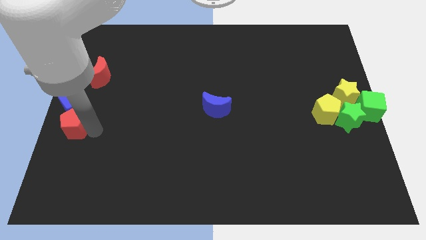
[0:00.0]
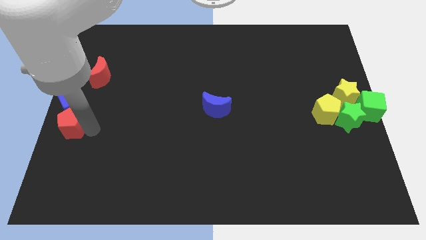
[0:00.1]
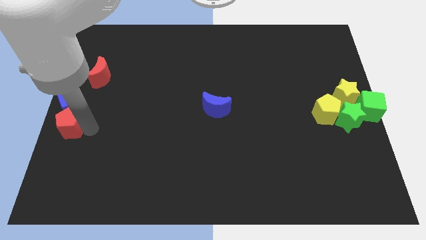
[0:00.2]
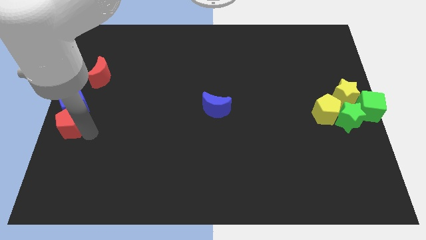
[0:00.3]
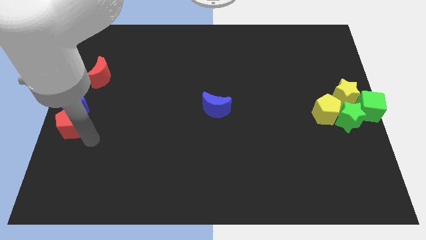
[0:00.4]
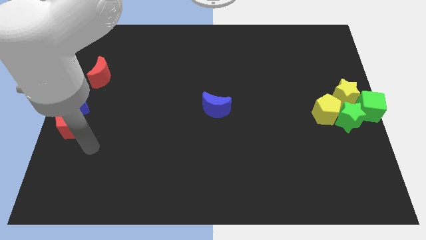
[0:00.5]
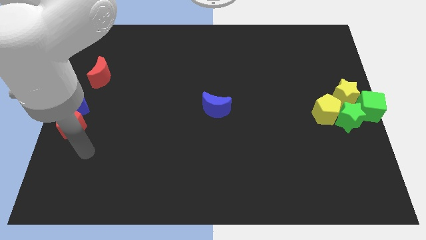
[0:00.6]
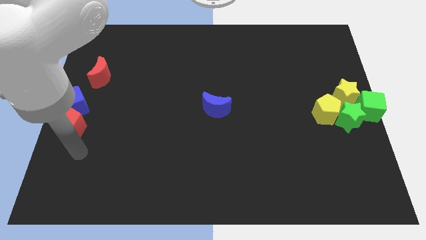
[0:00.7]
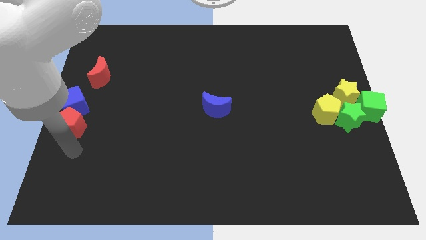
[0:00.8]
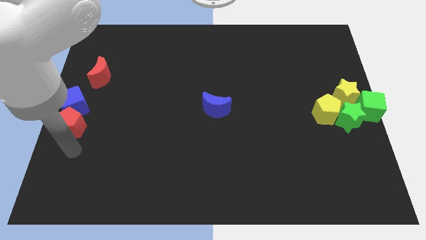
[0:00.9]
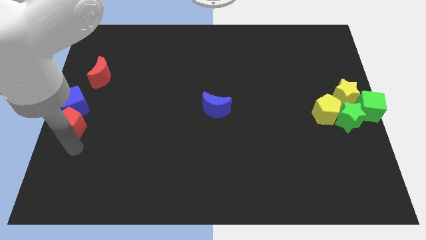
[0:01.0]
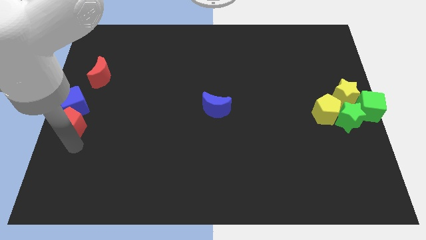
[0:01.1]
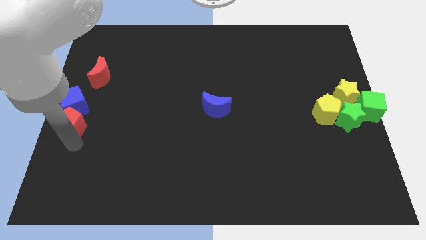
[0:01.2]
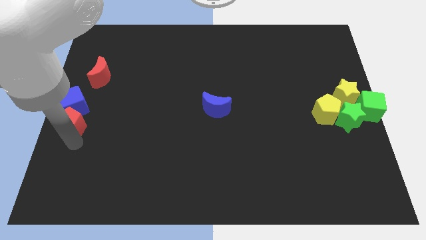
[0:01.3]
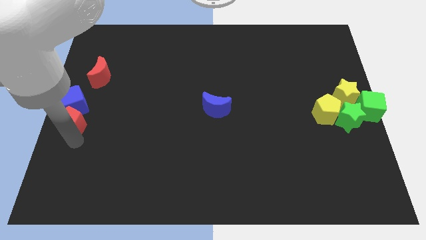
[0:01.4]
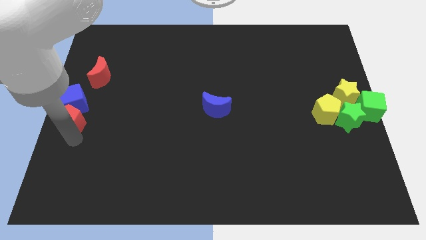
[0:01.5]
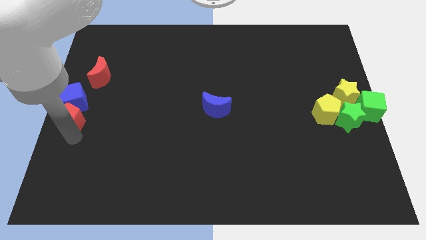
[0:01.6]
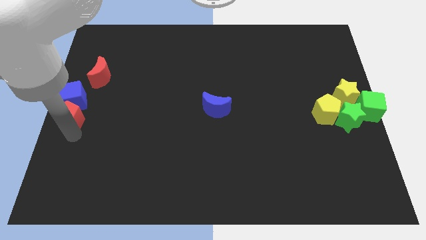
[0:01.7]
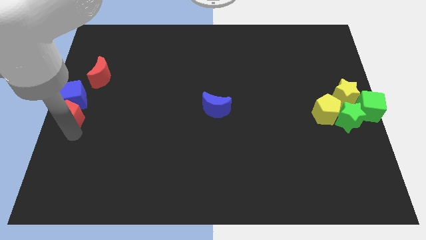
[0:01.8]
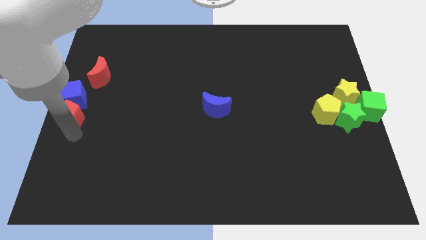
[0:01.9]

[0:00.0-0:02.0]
move the red pentagon to the bottom side of the blue cube

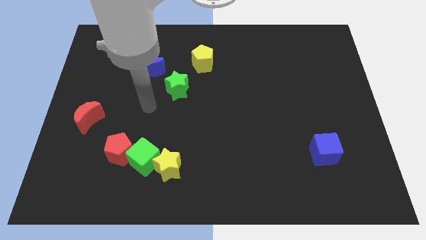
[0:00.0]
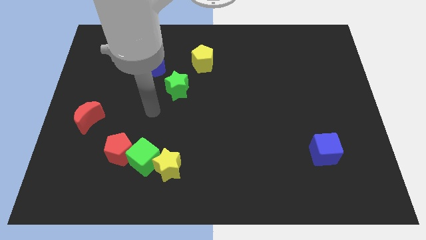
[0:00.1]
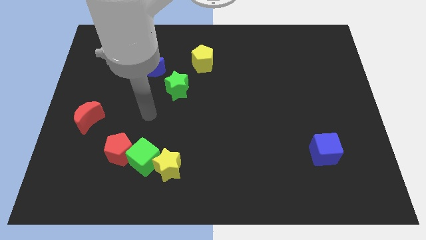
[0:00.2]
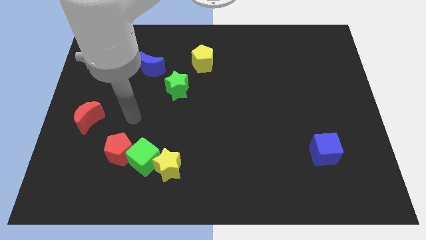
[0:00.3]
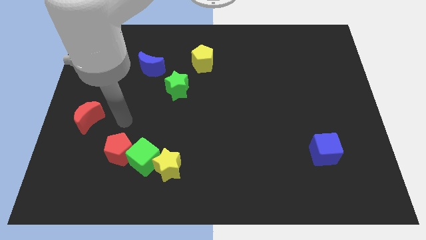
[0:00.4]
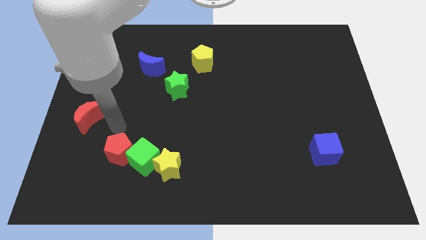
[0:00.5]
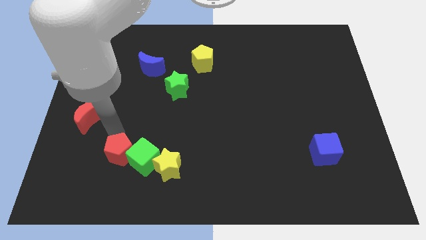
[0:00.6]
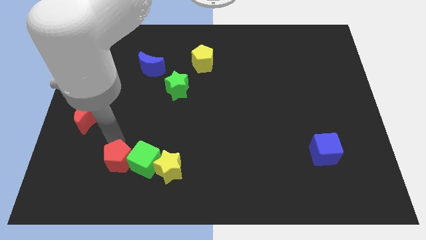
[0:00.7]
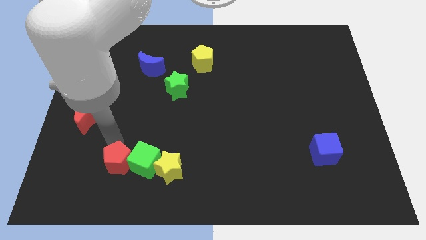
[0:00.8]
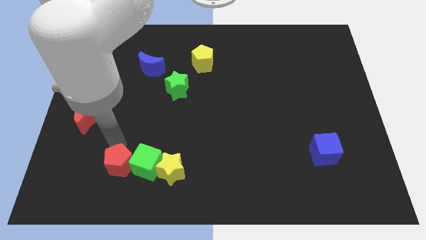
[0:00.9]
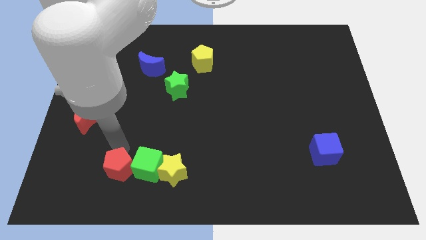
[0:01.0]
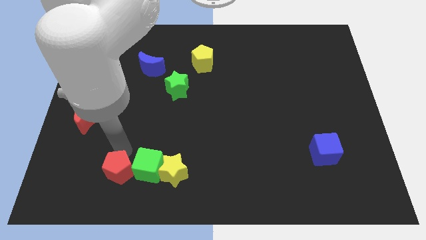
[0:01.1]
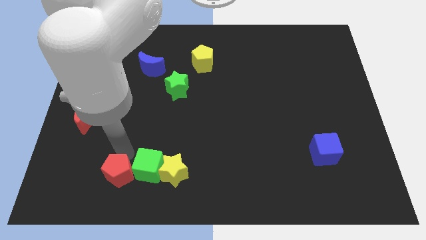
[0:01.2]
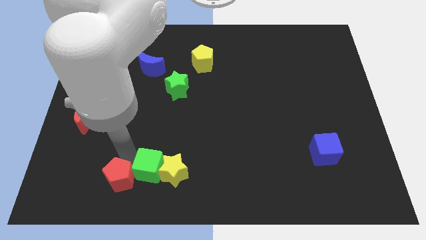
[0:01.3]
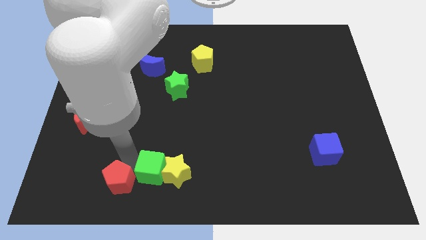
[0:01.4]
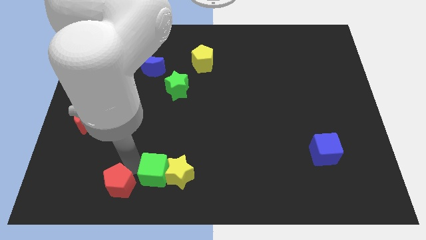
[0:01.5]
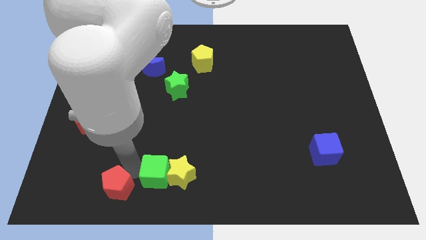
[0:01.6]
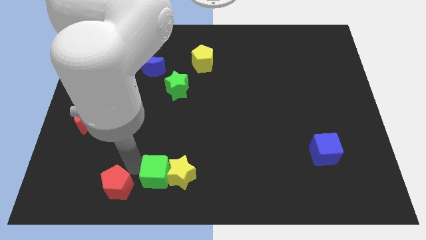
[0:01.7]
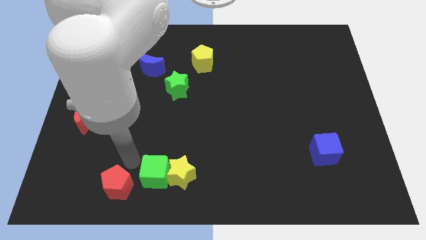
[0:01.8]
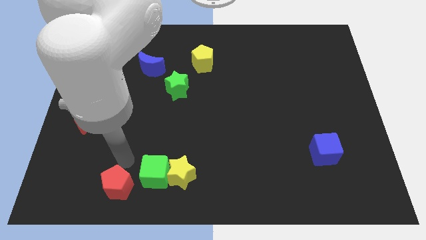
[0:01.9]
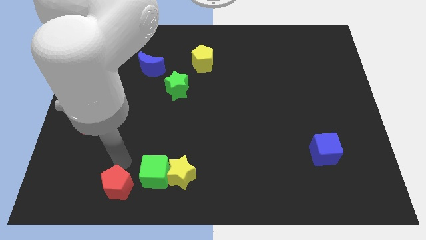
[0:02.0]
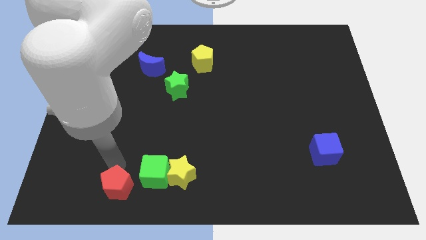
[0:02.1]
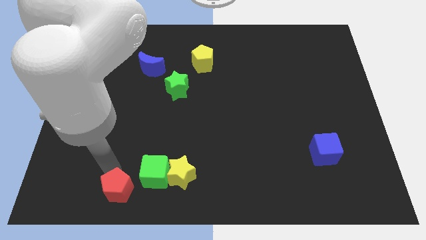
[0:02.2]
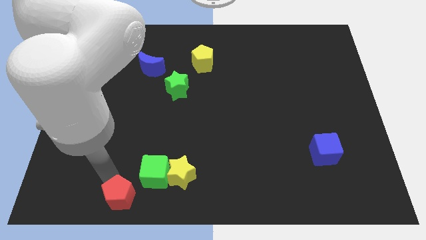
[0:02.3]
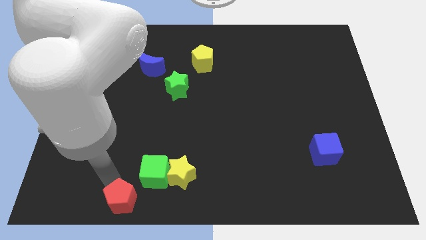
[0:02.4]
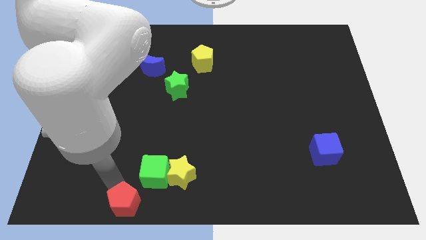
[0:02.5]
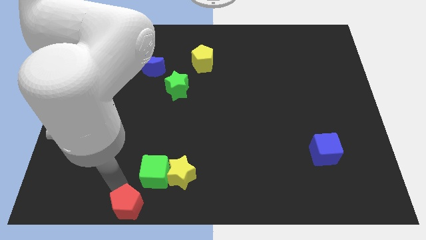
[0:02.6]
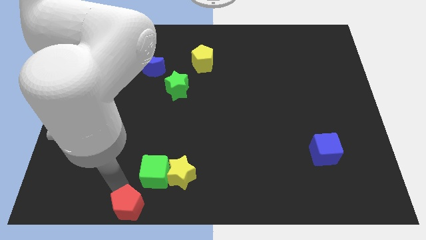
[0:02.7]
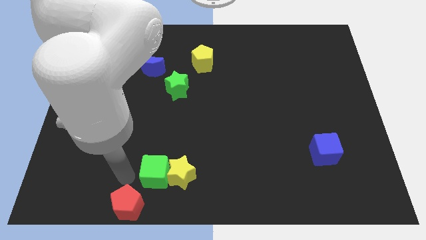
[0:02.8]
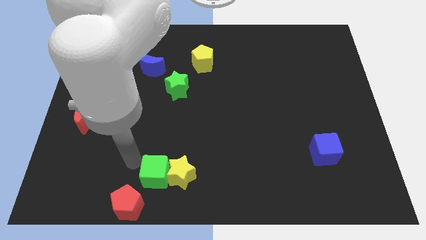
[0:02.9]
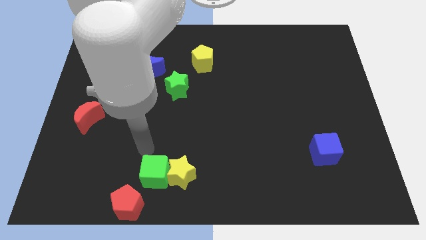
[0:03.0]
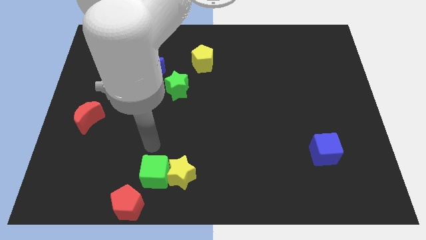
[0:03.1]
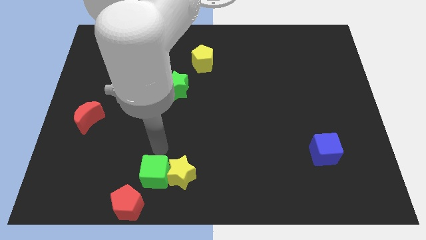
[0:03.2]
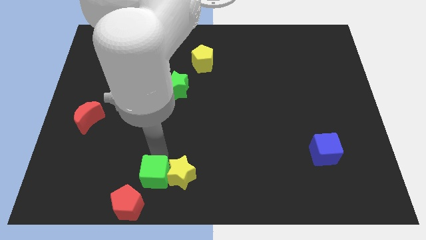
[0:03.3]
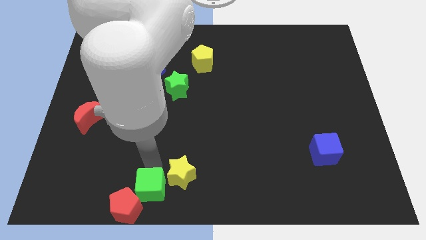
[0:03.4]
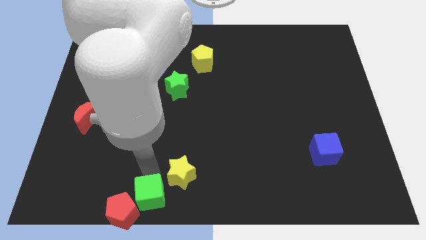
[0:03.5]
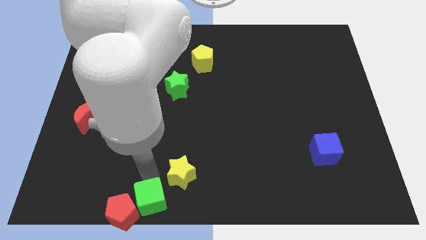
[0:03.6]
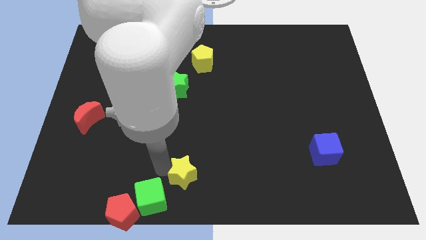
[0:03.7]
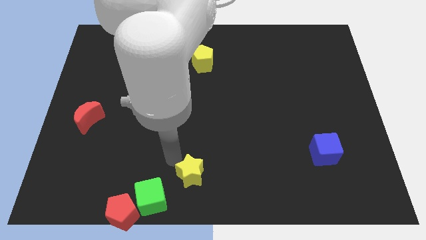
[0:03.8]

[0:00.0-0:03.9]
adjust the red pentagon green cube and yellow star to make a diagonal line of blocks

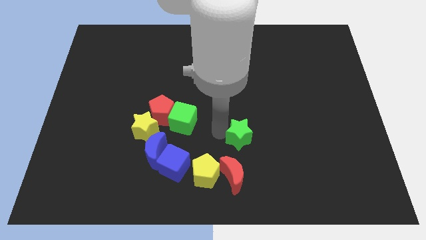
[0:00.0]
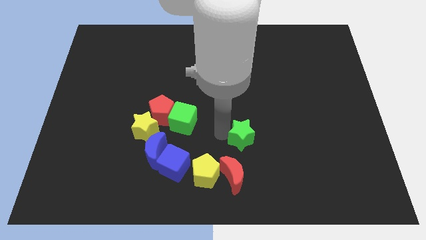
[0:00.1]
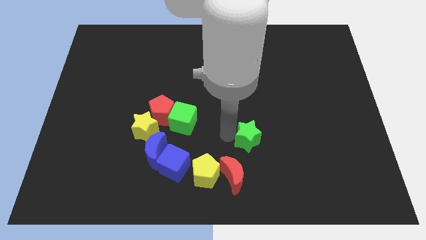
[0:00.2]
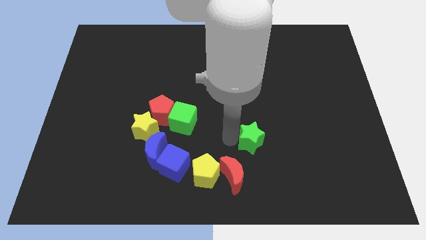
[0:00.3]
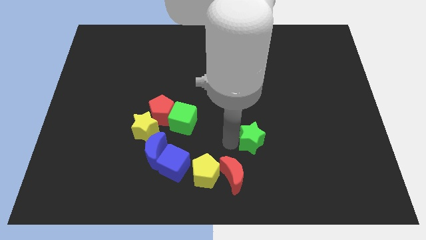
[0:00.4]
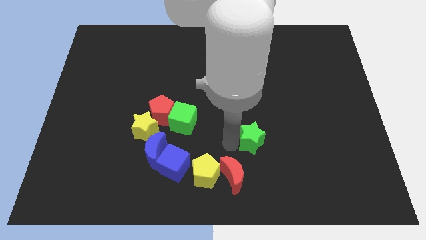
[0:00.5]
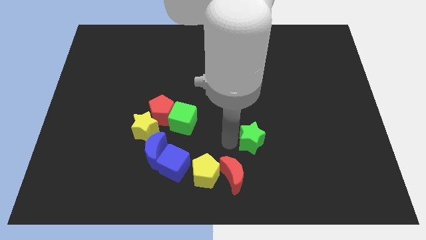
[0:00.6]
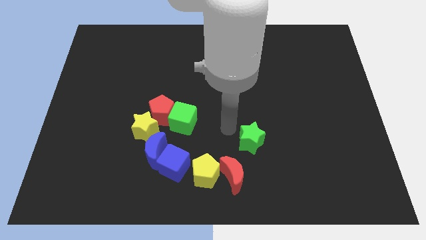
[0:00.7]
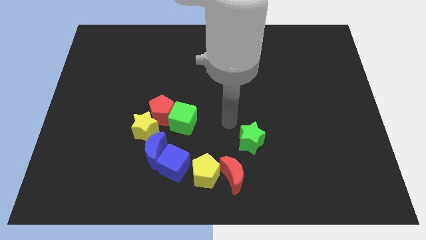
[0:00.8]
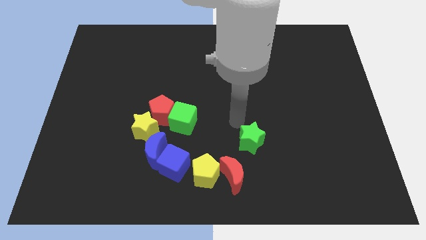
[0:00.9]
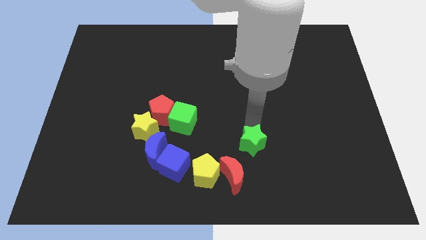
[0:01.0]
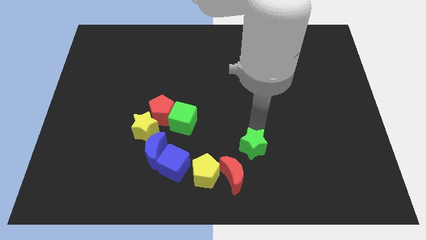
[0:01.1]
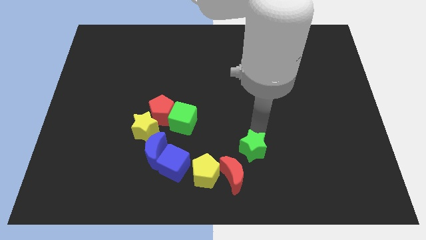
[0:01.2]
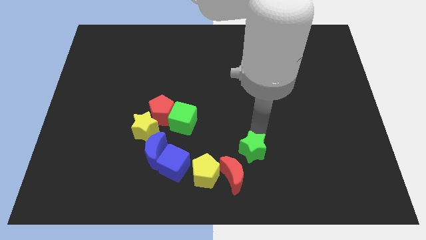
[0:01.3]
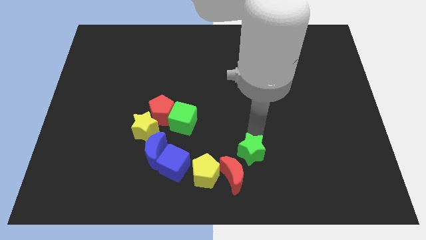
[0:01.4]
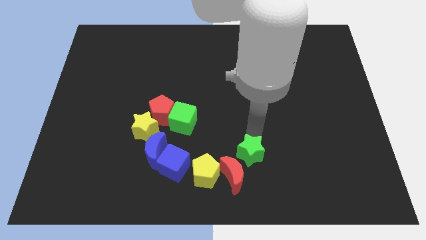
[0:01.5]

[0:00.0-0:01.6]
slide the green star close to the red moon

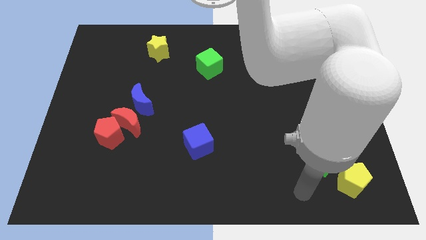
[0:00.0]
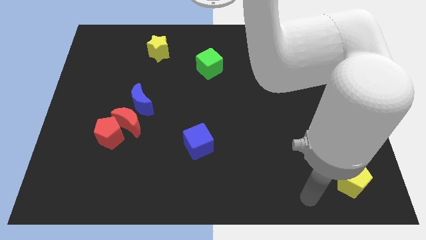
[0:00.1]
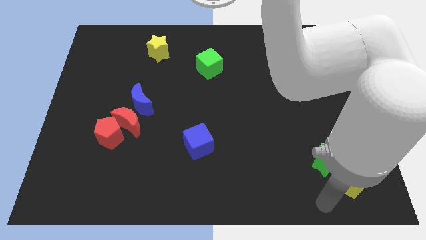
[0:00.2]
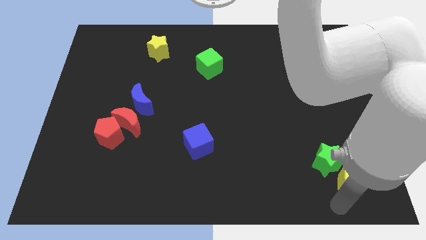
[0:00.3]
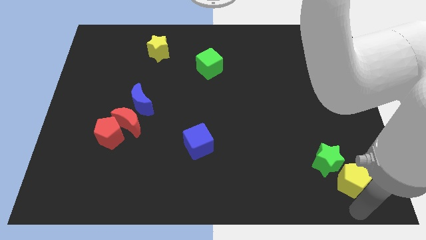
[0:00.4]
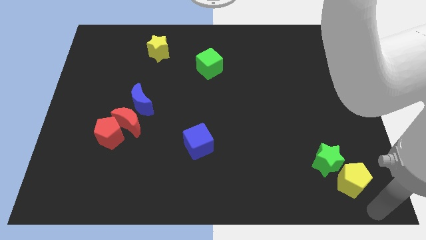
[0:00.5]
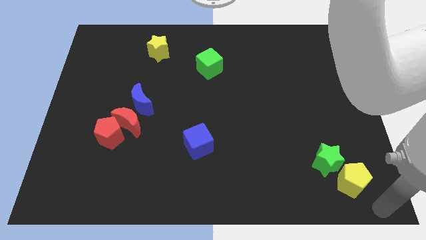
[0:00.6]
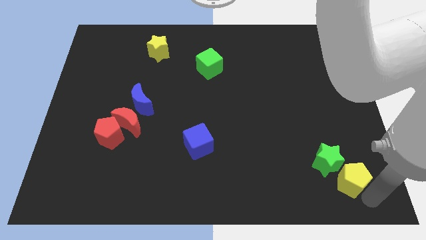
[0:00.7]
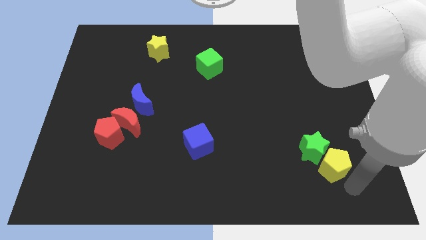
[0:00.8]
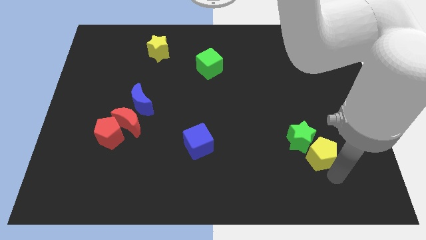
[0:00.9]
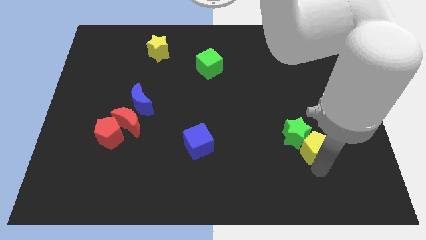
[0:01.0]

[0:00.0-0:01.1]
push yellow pentagon in to green star

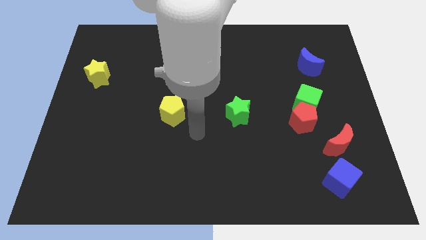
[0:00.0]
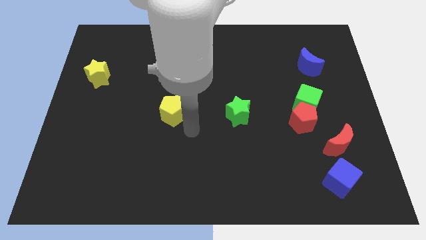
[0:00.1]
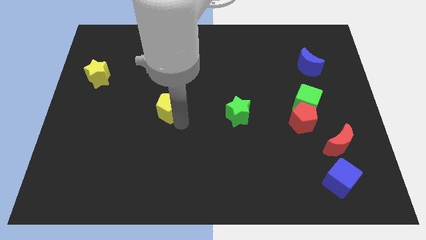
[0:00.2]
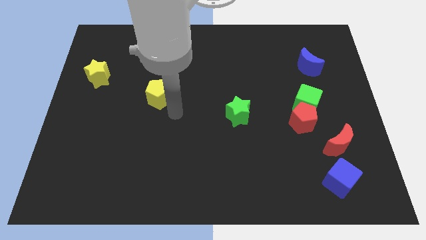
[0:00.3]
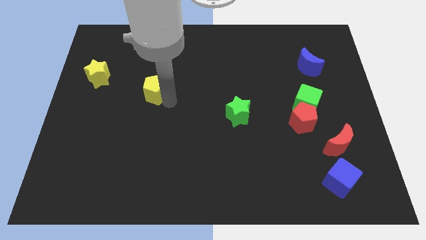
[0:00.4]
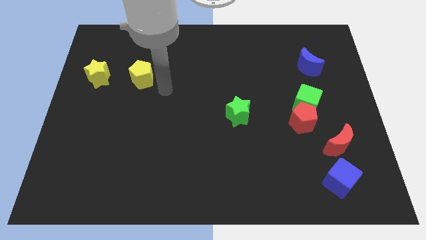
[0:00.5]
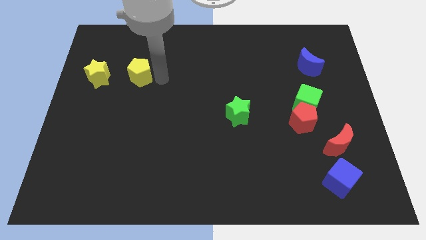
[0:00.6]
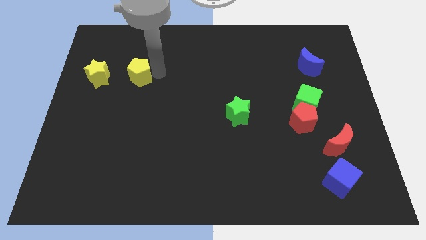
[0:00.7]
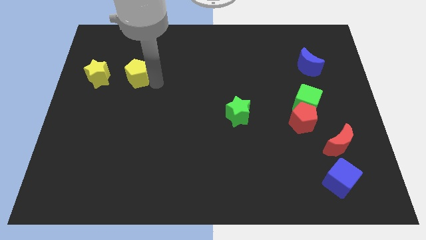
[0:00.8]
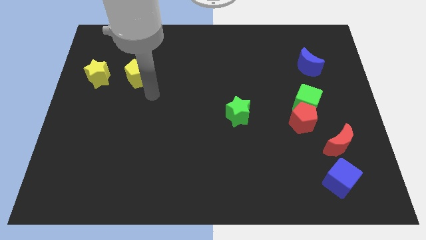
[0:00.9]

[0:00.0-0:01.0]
move the yellow pentagon to the right of the yellow star
